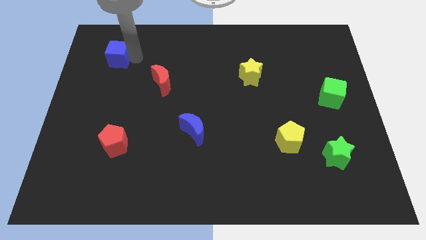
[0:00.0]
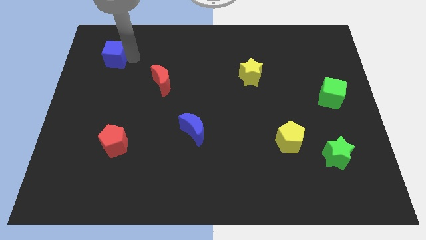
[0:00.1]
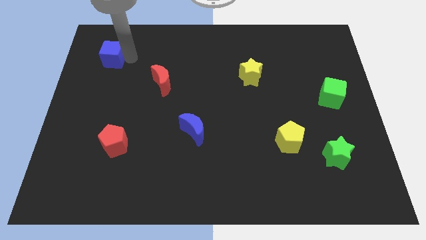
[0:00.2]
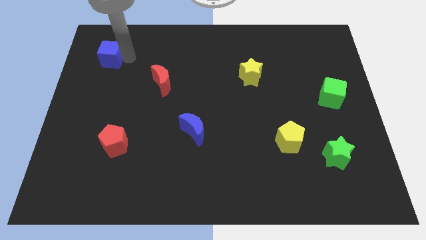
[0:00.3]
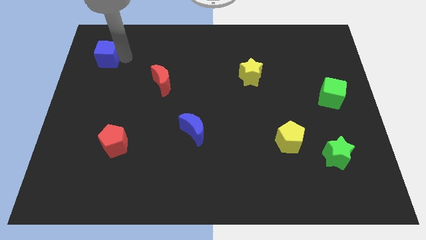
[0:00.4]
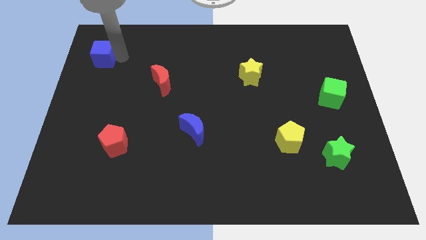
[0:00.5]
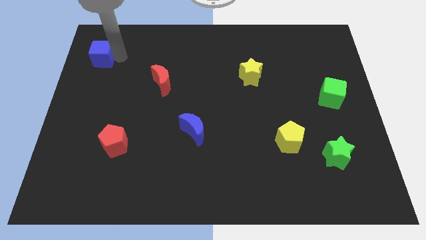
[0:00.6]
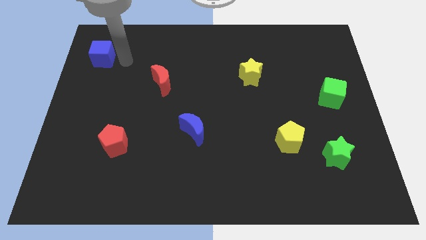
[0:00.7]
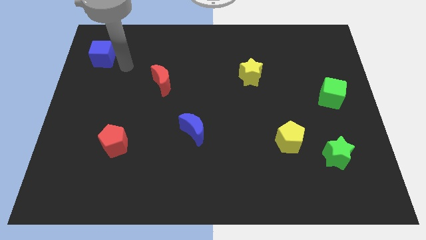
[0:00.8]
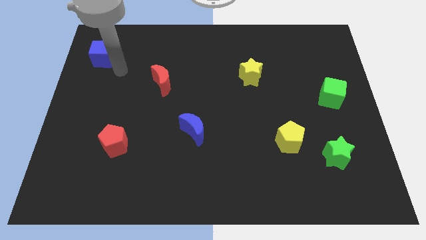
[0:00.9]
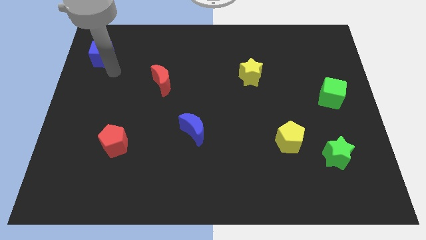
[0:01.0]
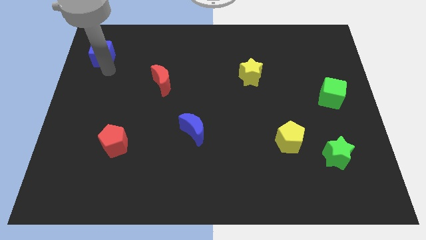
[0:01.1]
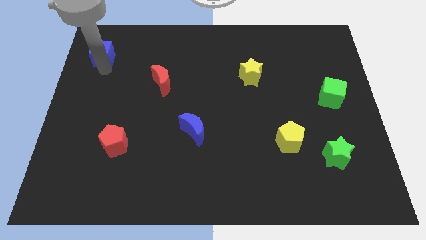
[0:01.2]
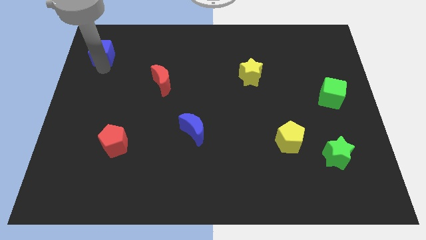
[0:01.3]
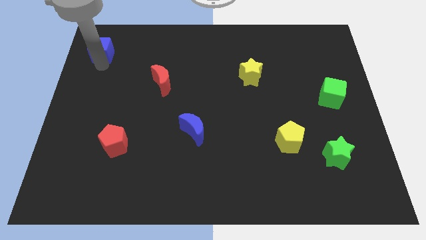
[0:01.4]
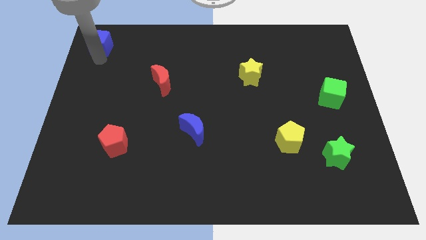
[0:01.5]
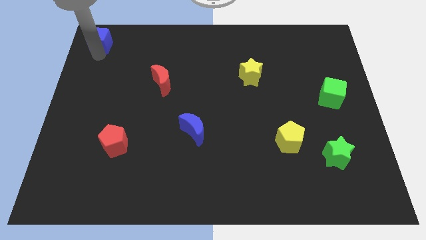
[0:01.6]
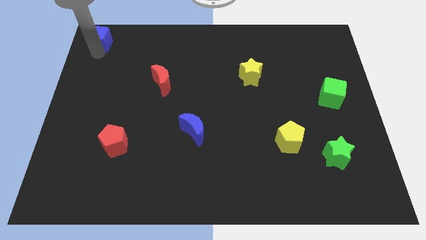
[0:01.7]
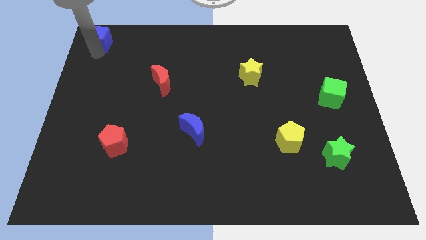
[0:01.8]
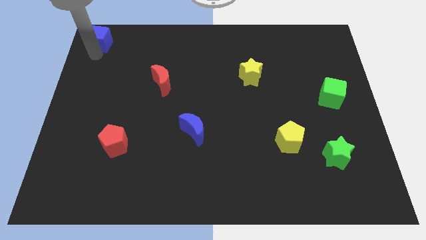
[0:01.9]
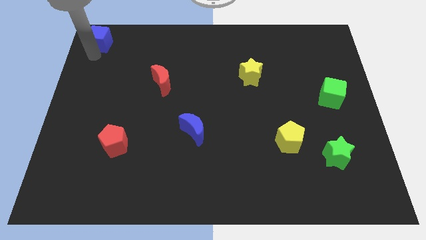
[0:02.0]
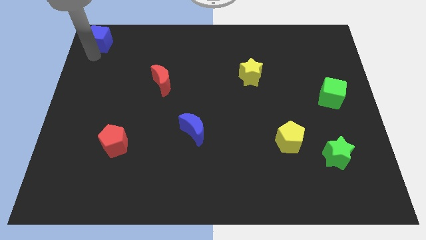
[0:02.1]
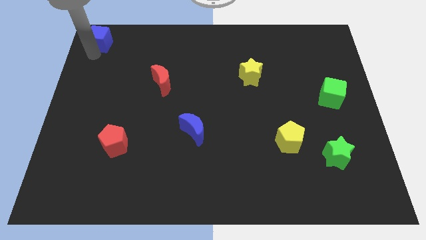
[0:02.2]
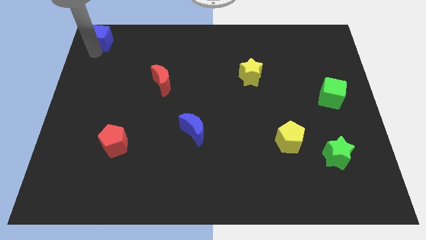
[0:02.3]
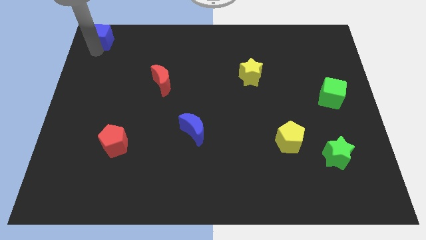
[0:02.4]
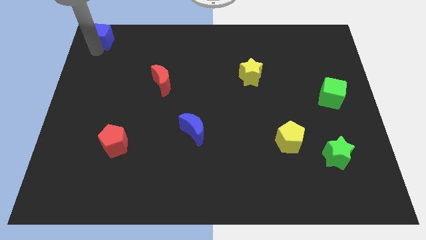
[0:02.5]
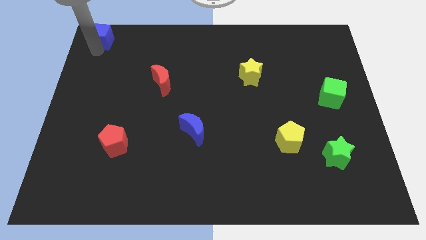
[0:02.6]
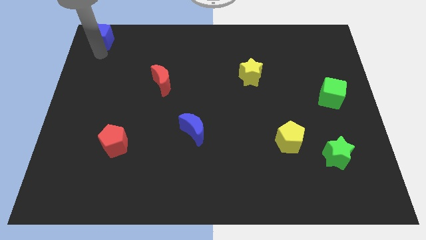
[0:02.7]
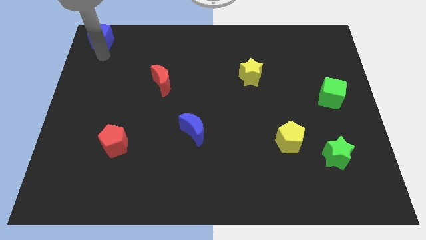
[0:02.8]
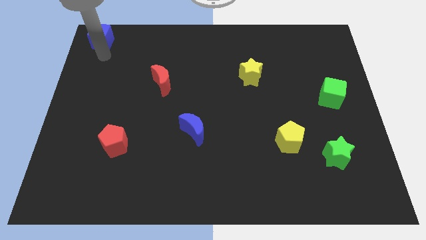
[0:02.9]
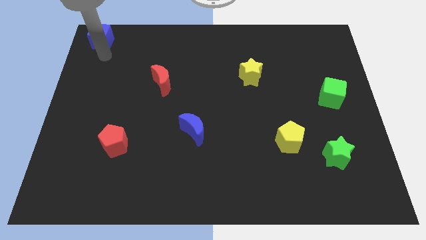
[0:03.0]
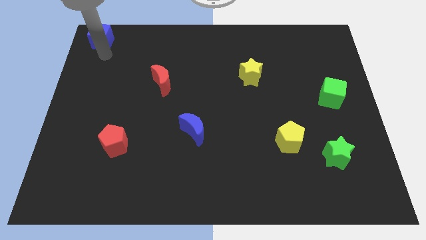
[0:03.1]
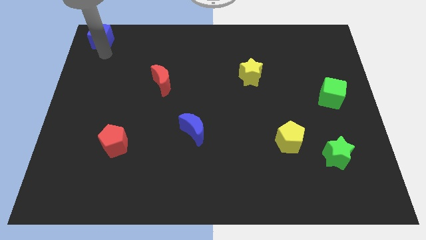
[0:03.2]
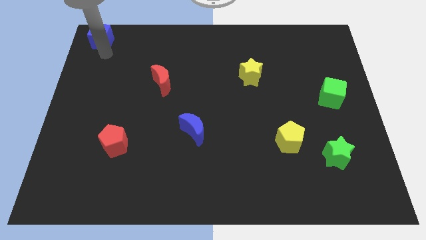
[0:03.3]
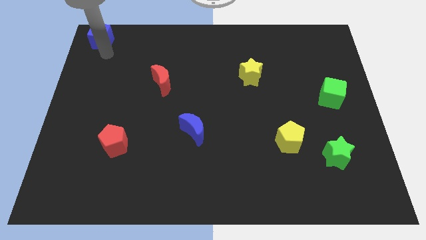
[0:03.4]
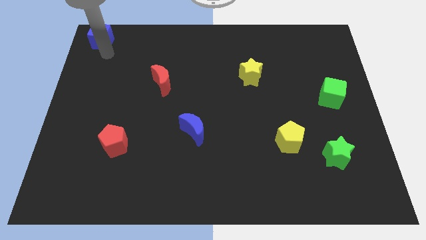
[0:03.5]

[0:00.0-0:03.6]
move the blue cube at the top left corner of the board

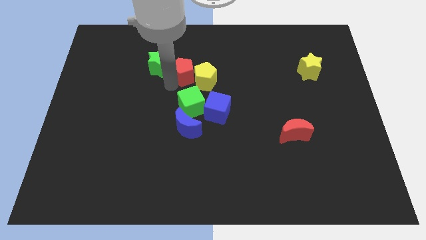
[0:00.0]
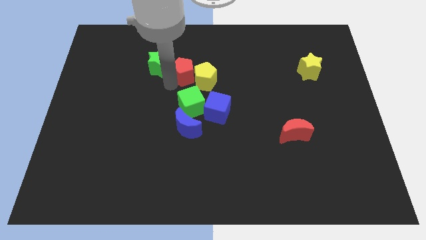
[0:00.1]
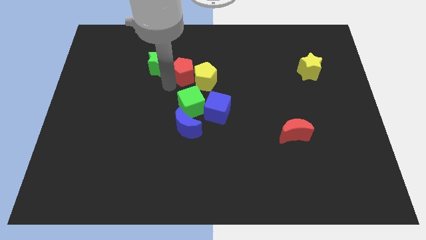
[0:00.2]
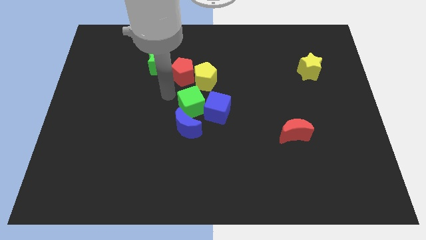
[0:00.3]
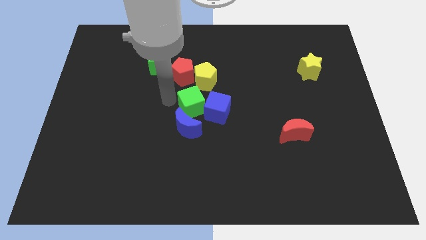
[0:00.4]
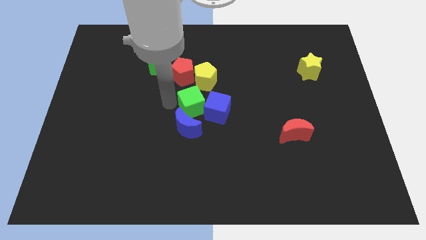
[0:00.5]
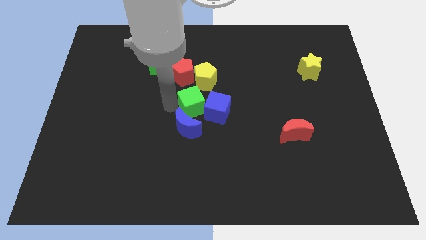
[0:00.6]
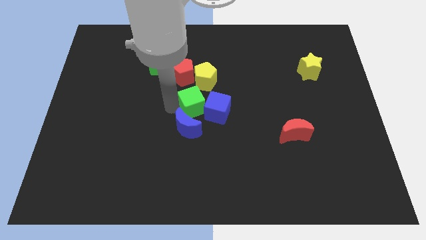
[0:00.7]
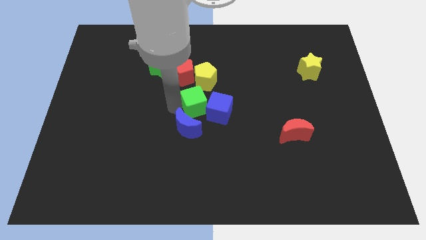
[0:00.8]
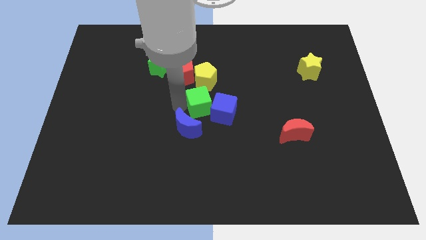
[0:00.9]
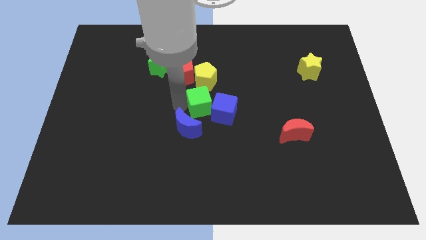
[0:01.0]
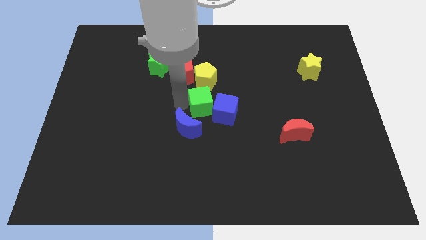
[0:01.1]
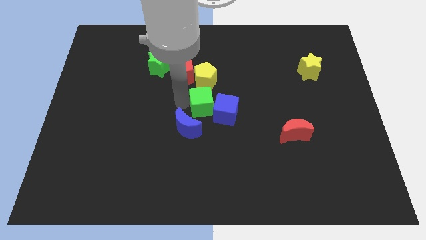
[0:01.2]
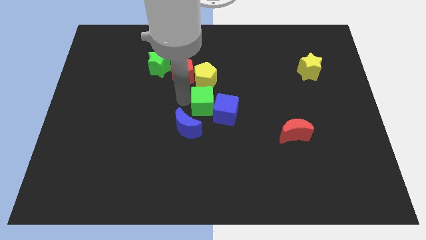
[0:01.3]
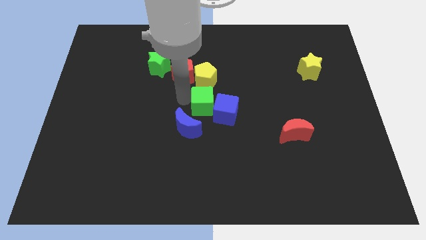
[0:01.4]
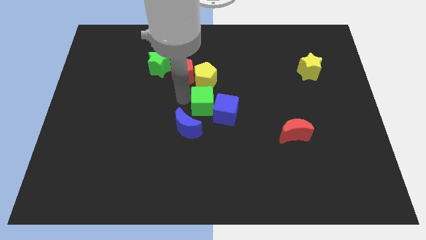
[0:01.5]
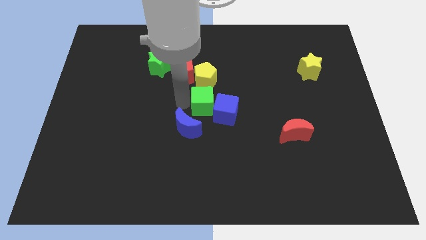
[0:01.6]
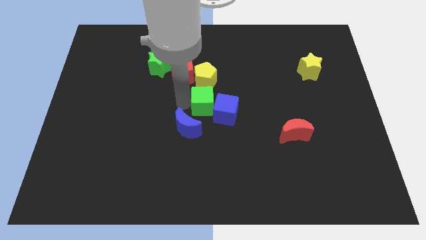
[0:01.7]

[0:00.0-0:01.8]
place green cube to the bottom of yellow pentagon

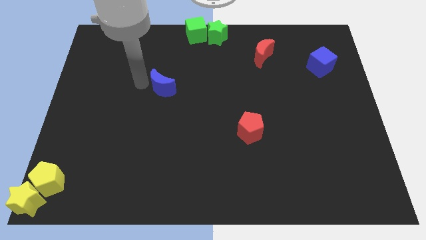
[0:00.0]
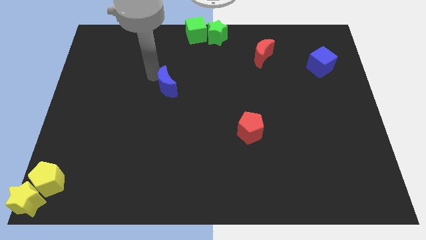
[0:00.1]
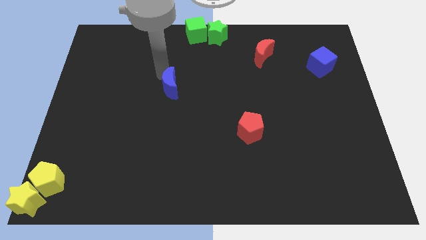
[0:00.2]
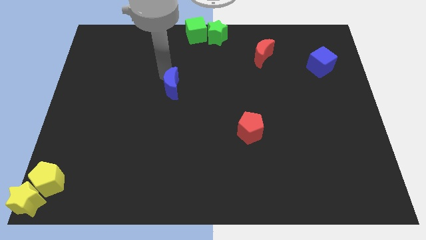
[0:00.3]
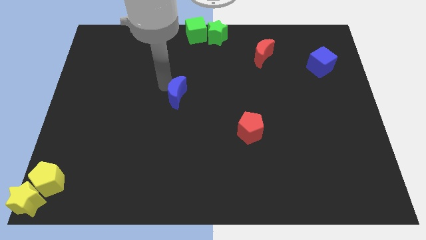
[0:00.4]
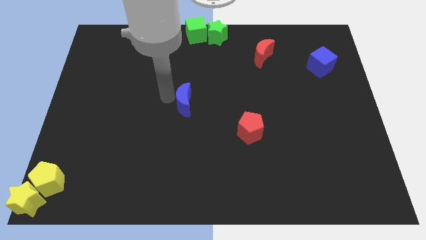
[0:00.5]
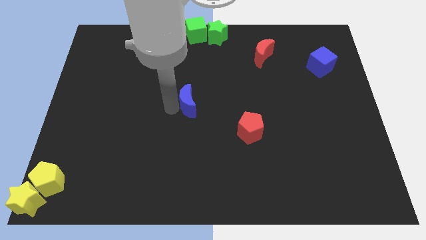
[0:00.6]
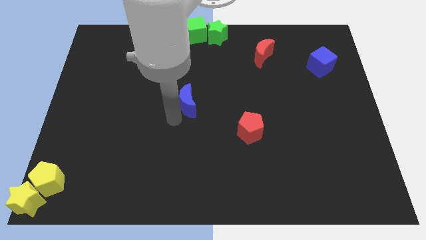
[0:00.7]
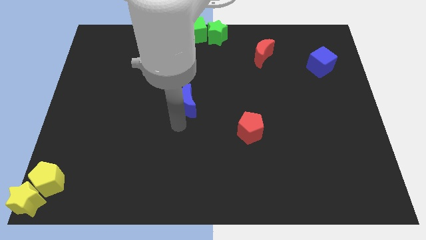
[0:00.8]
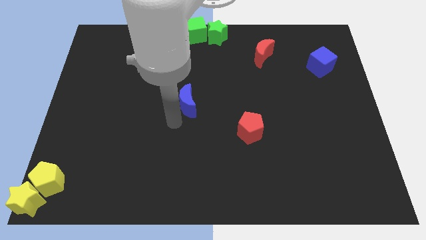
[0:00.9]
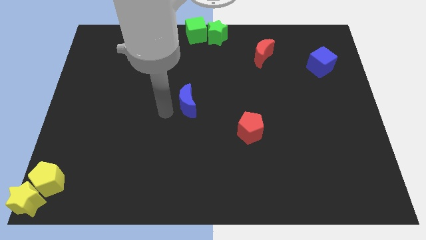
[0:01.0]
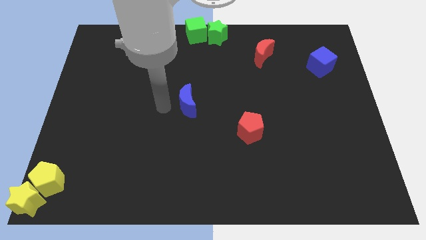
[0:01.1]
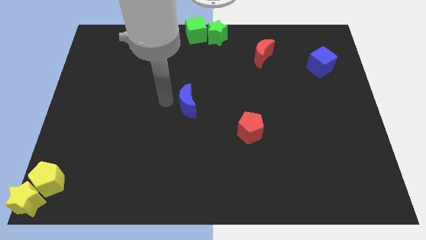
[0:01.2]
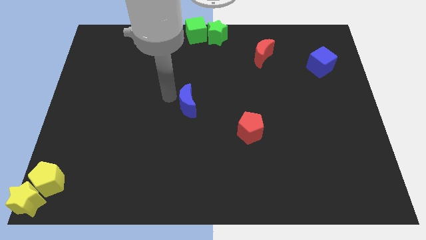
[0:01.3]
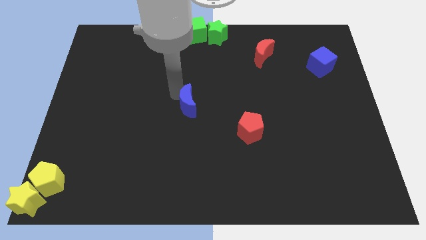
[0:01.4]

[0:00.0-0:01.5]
move the blue crescent to the center of the board

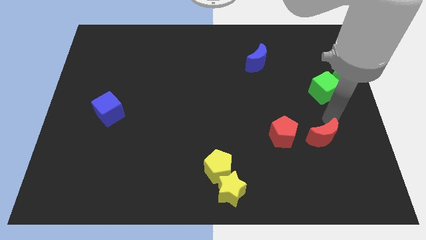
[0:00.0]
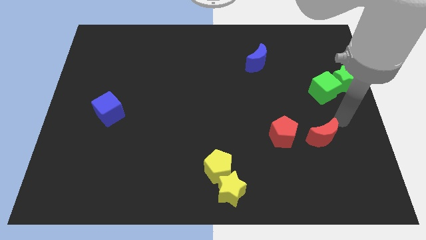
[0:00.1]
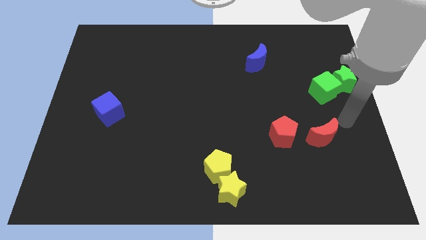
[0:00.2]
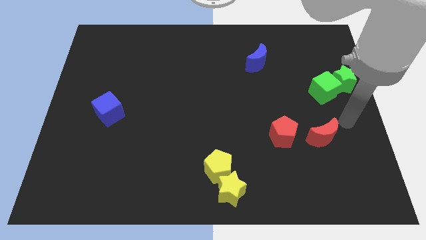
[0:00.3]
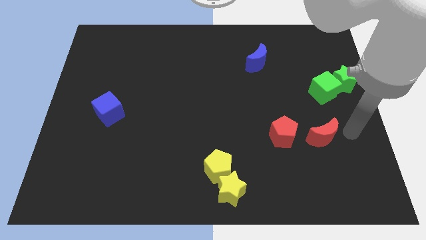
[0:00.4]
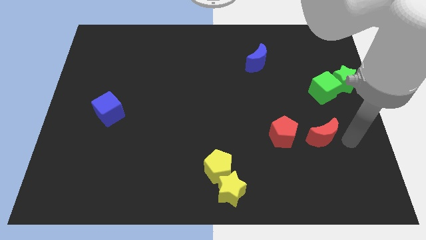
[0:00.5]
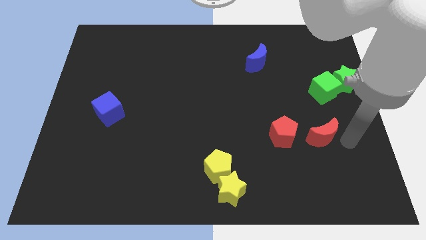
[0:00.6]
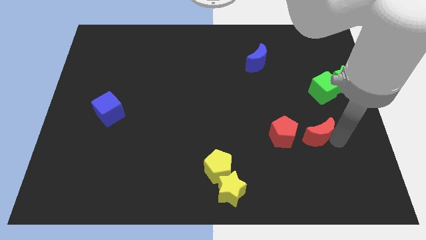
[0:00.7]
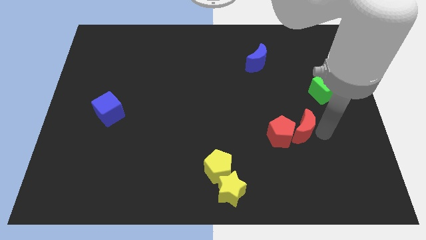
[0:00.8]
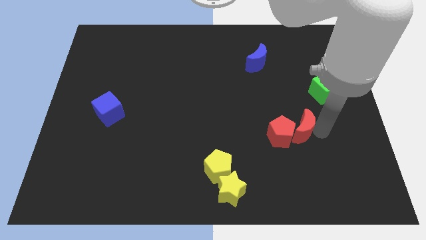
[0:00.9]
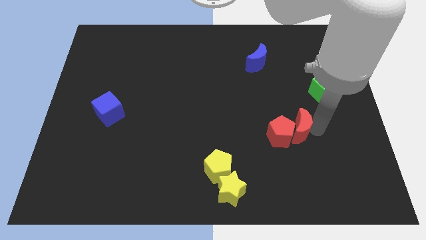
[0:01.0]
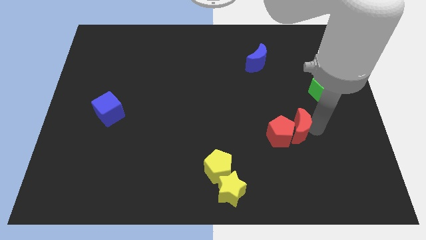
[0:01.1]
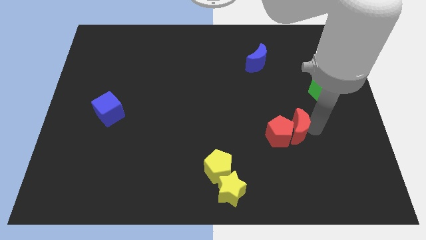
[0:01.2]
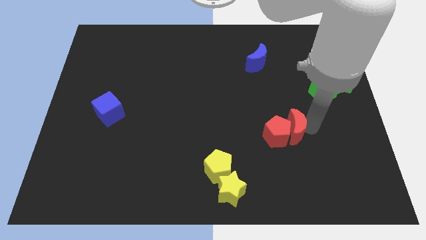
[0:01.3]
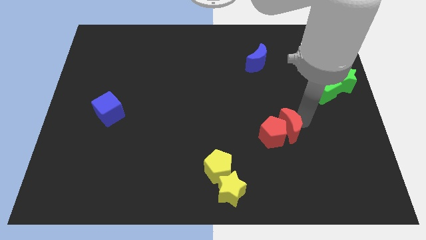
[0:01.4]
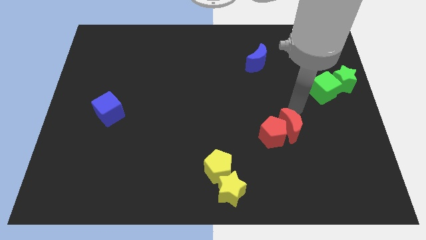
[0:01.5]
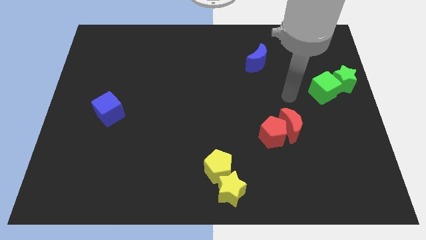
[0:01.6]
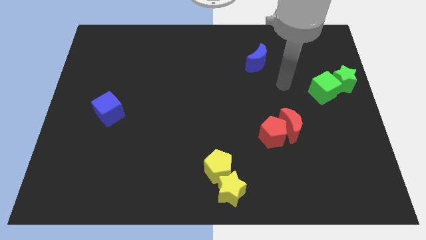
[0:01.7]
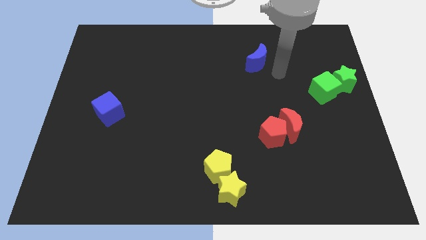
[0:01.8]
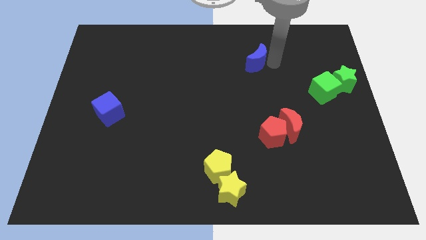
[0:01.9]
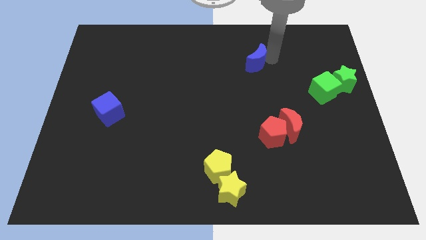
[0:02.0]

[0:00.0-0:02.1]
push the red moon into the red pentagon
